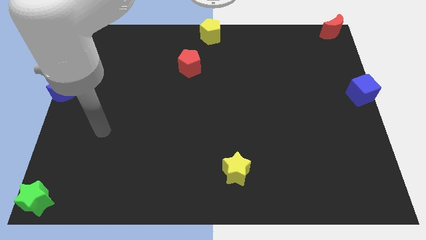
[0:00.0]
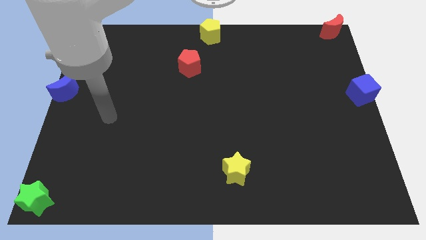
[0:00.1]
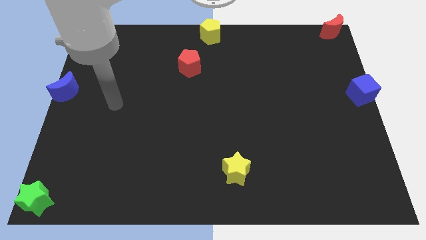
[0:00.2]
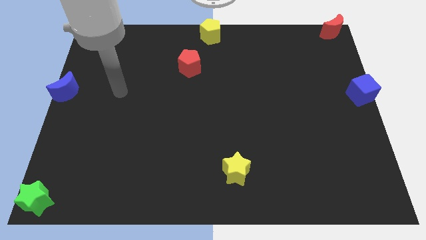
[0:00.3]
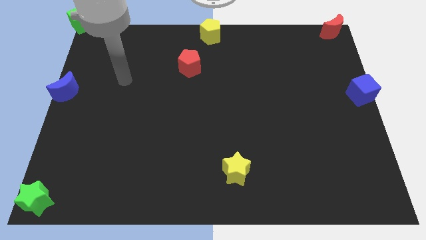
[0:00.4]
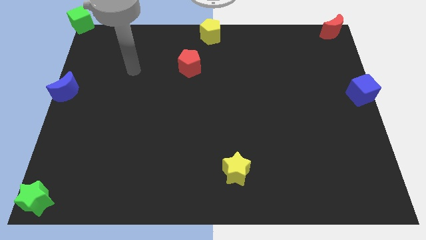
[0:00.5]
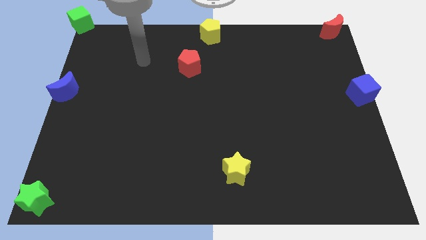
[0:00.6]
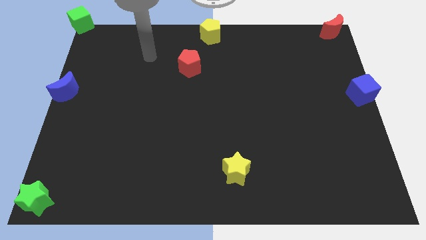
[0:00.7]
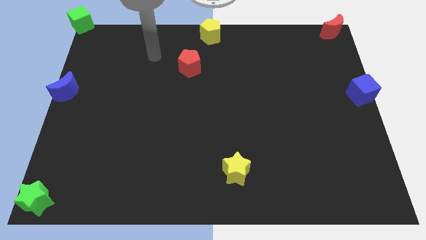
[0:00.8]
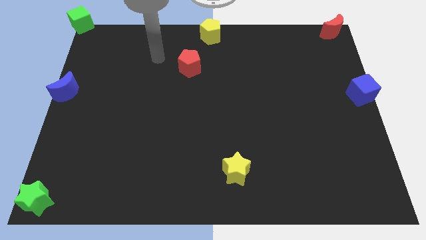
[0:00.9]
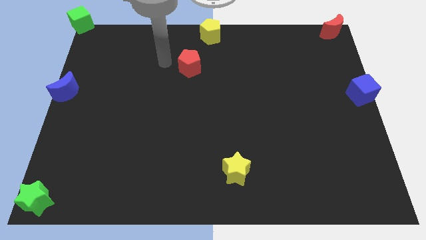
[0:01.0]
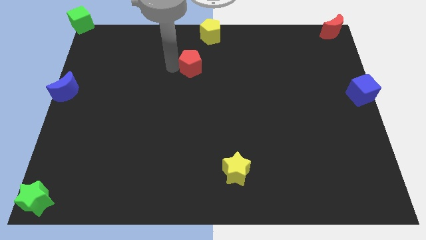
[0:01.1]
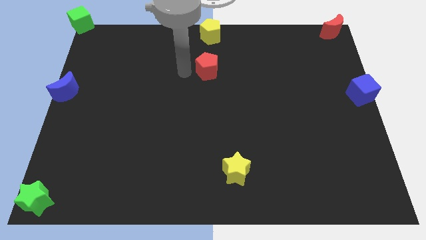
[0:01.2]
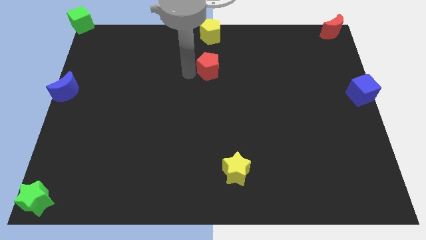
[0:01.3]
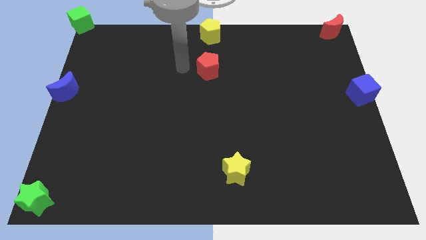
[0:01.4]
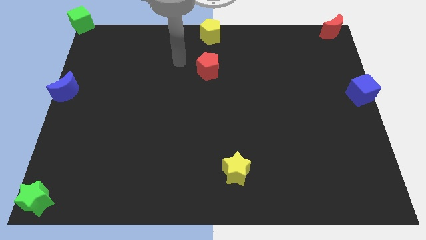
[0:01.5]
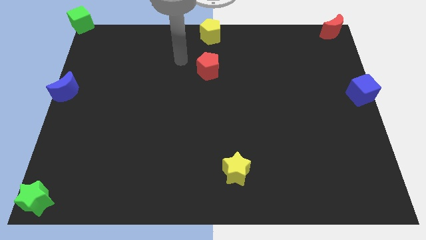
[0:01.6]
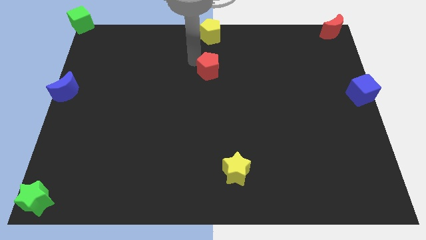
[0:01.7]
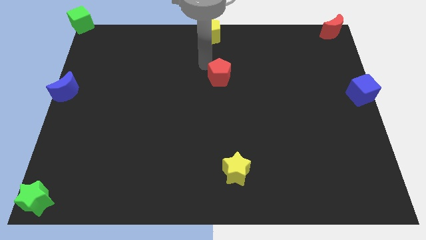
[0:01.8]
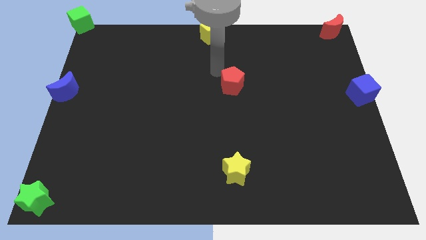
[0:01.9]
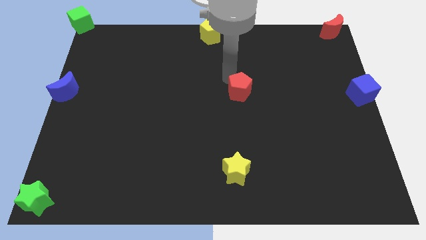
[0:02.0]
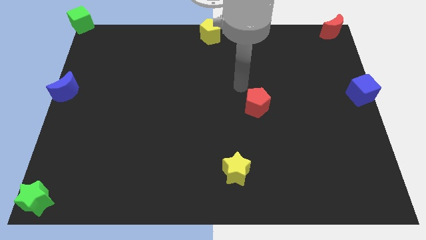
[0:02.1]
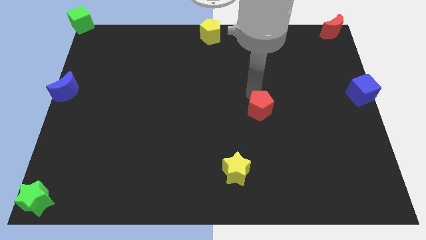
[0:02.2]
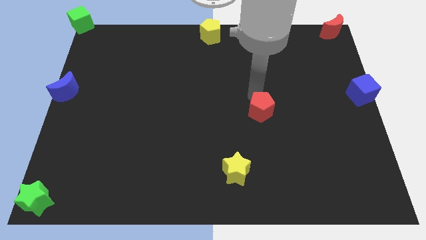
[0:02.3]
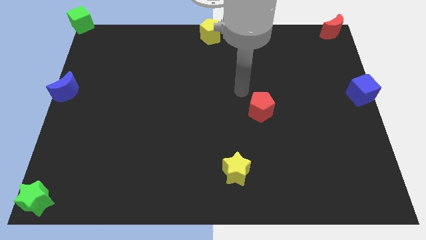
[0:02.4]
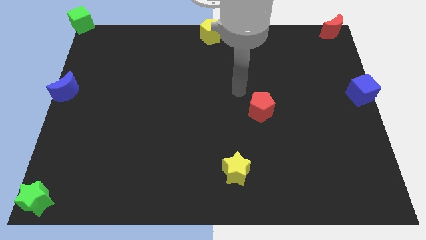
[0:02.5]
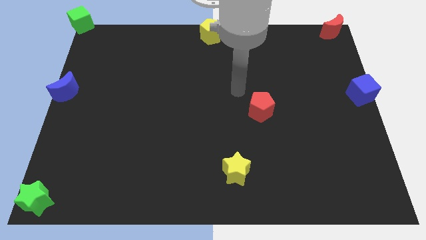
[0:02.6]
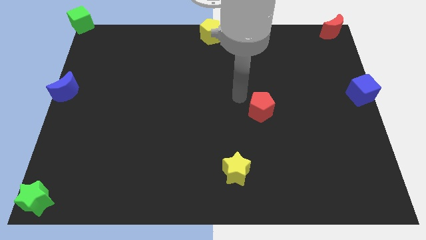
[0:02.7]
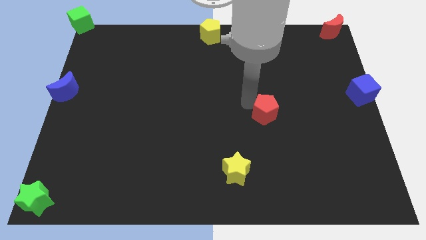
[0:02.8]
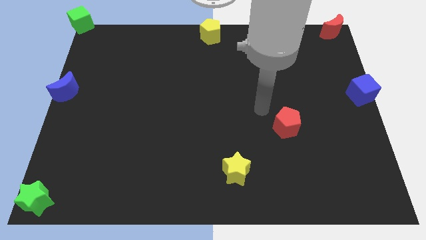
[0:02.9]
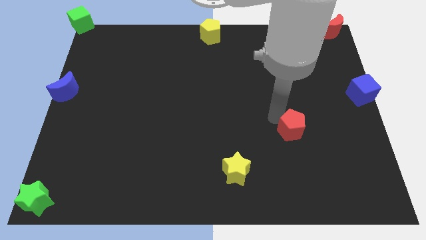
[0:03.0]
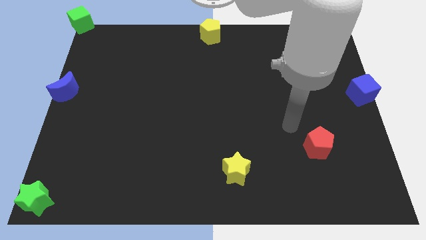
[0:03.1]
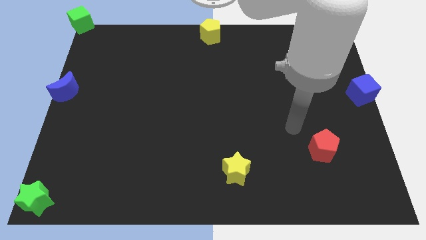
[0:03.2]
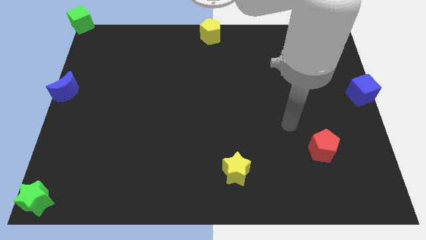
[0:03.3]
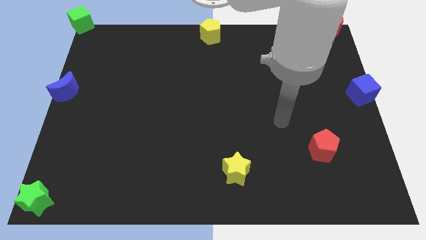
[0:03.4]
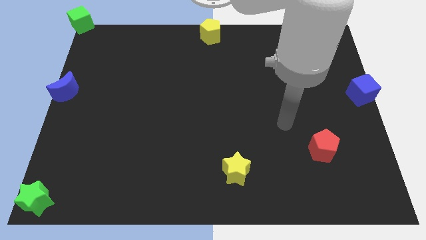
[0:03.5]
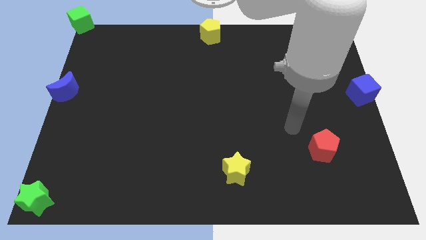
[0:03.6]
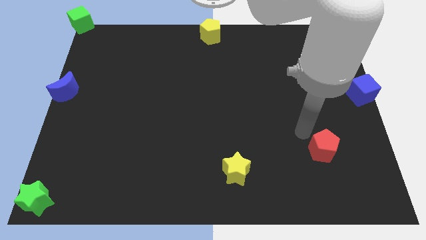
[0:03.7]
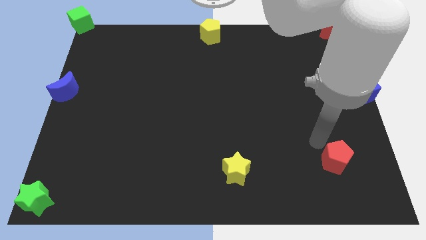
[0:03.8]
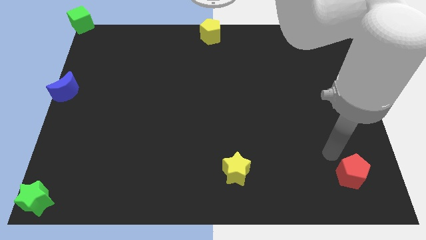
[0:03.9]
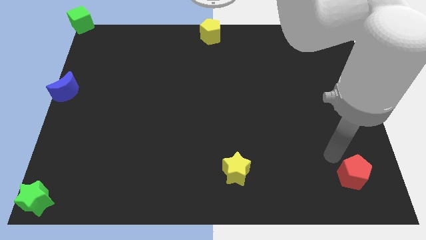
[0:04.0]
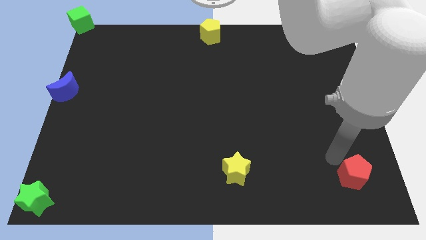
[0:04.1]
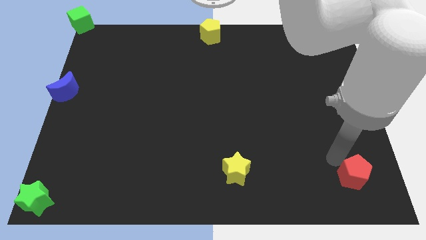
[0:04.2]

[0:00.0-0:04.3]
slide the red pentagon to the right of the yellow star

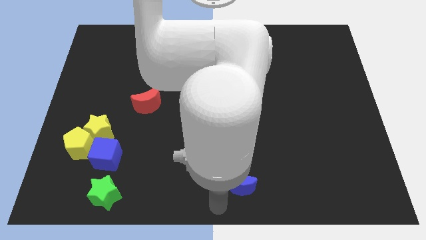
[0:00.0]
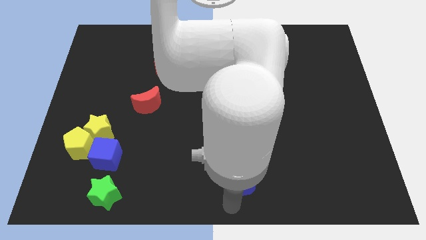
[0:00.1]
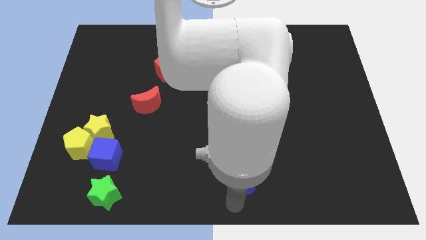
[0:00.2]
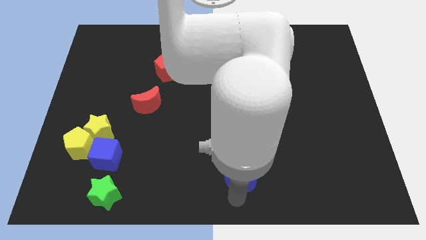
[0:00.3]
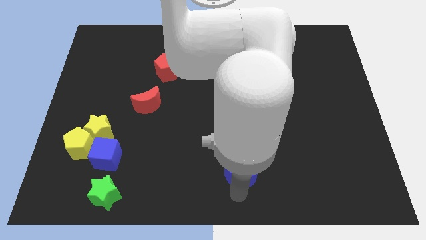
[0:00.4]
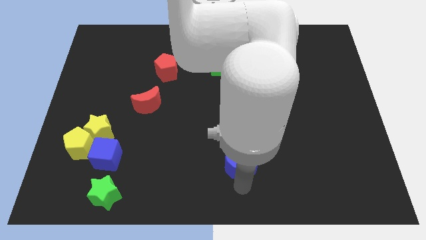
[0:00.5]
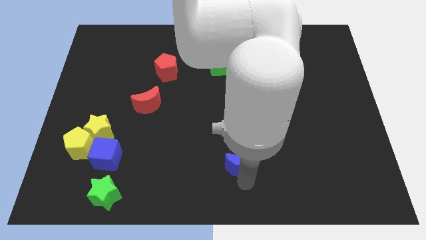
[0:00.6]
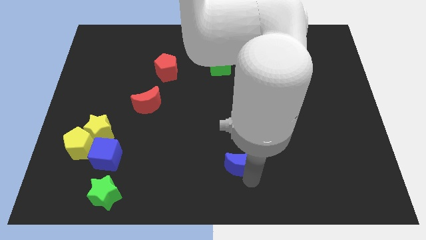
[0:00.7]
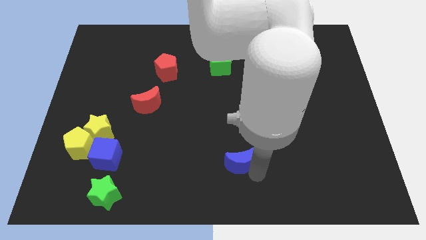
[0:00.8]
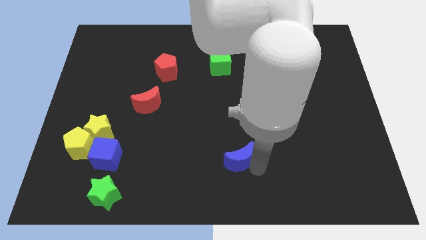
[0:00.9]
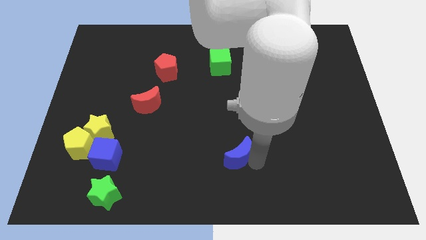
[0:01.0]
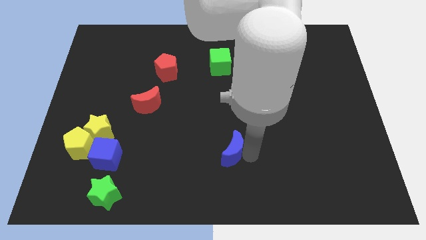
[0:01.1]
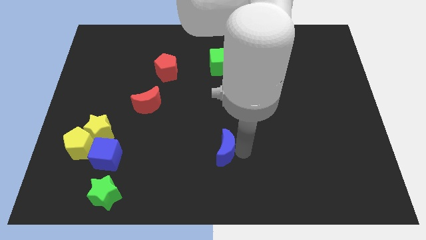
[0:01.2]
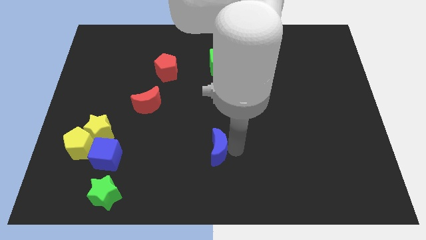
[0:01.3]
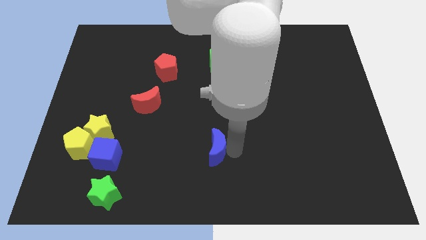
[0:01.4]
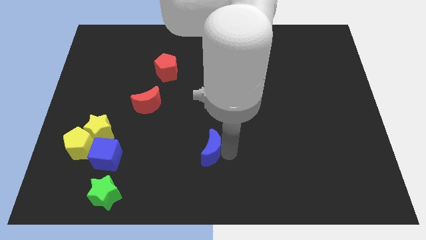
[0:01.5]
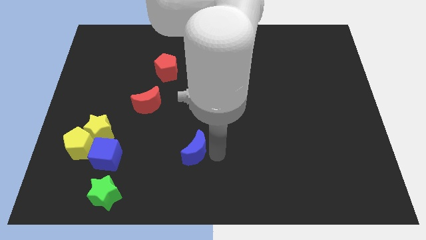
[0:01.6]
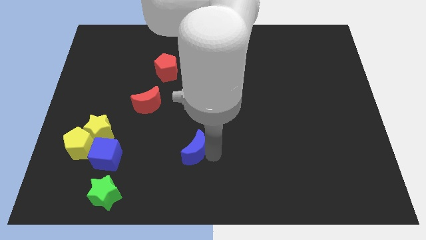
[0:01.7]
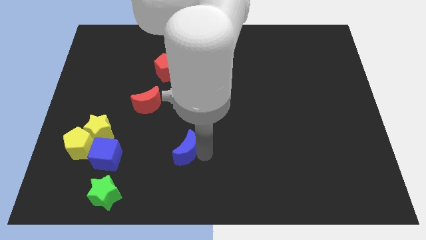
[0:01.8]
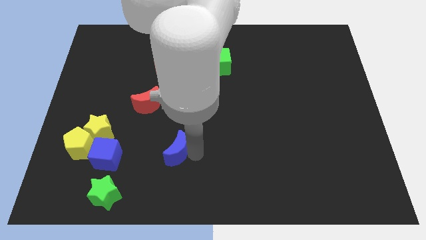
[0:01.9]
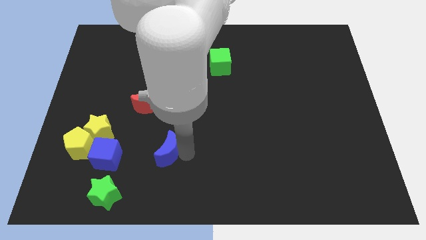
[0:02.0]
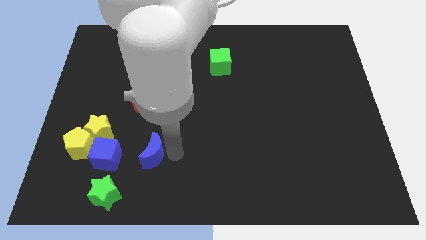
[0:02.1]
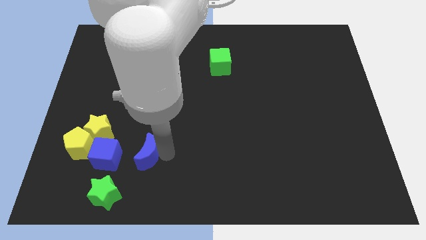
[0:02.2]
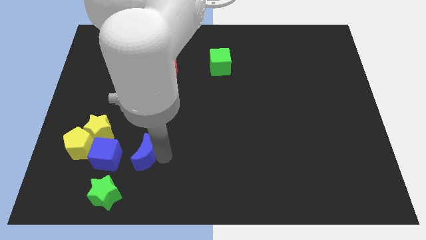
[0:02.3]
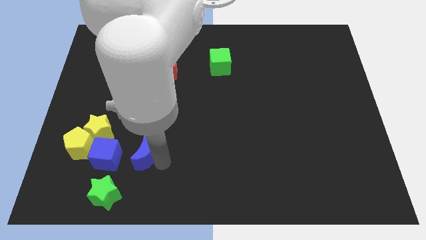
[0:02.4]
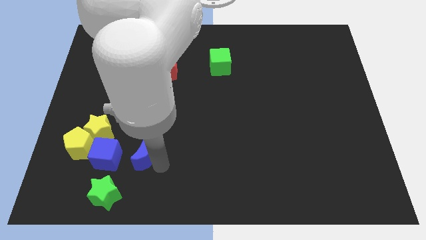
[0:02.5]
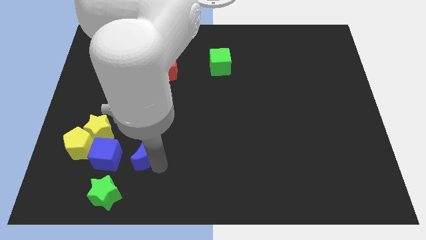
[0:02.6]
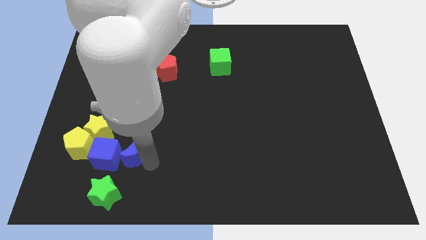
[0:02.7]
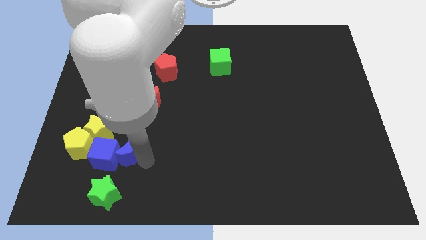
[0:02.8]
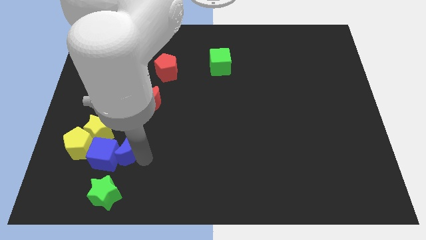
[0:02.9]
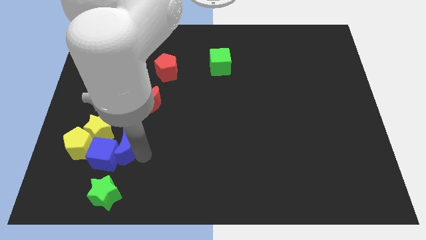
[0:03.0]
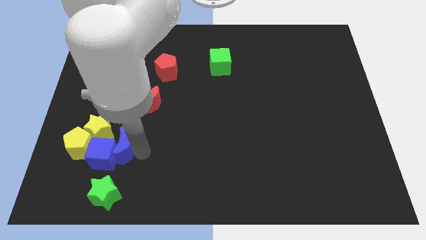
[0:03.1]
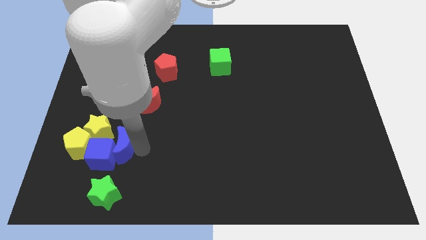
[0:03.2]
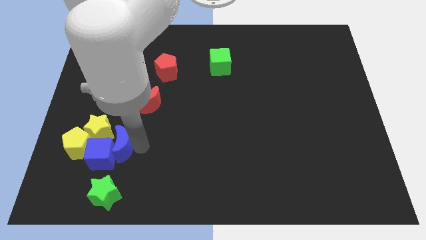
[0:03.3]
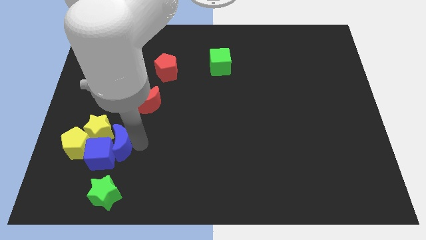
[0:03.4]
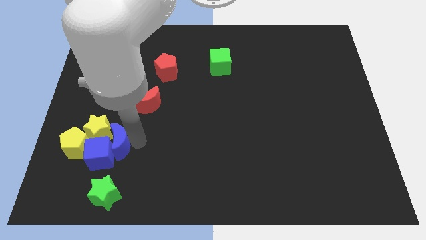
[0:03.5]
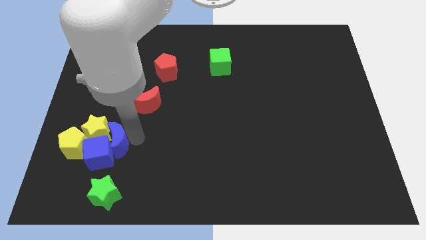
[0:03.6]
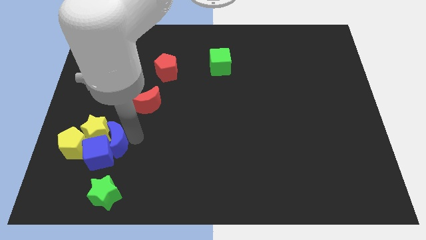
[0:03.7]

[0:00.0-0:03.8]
move blue moon into the group of blocks

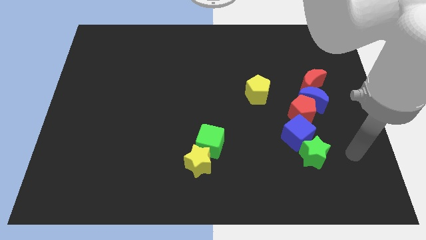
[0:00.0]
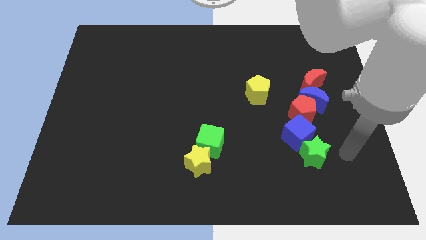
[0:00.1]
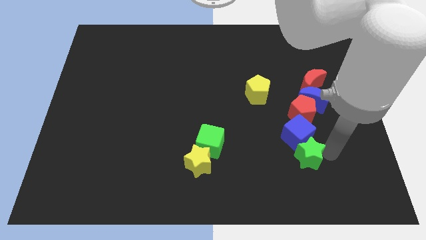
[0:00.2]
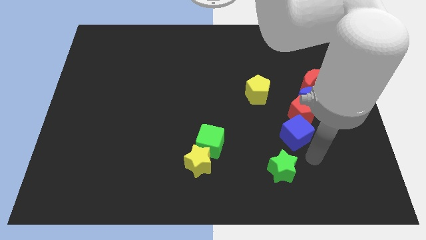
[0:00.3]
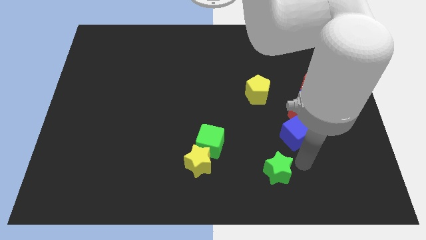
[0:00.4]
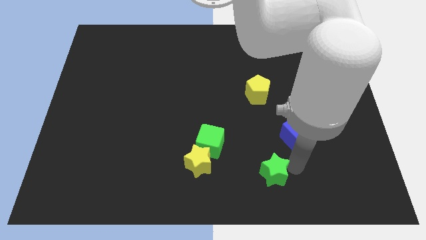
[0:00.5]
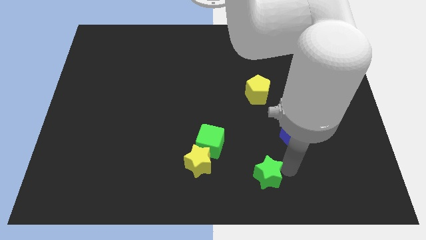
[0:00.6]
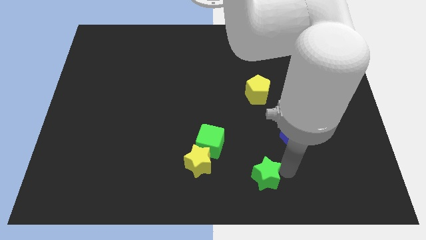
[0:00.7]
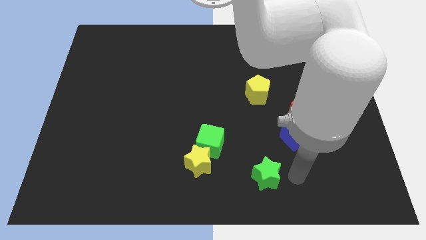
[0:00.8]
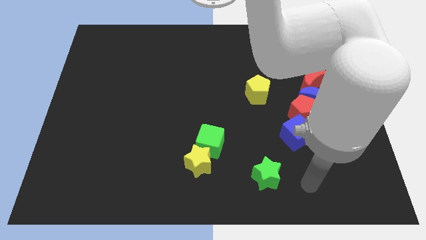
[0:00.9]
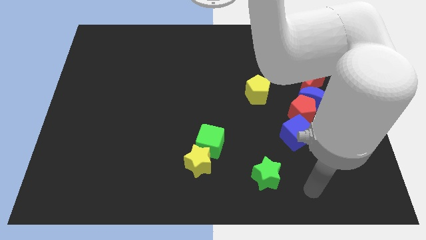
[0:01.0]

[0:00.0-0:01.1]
move the green star away from the blue cube
